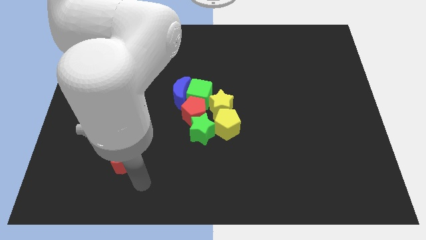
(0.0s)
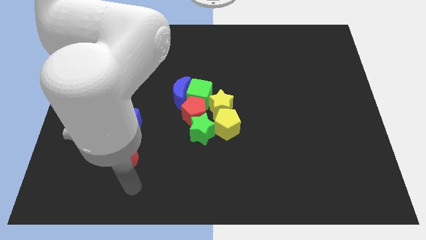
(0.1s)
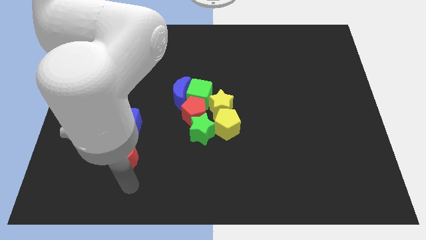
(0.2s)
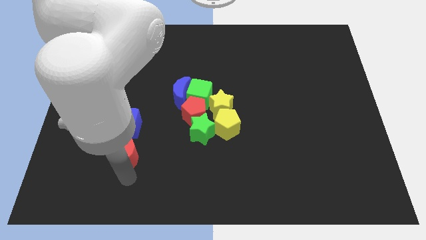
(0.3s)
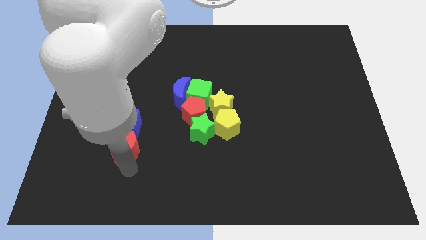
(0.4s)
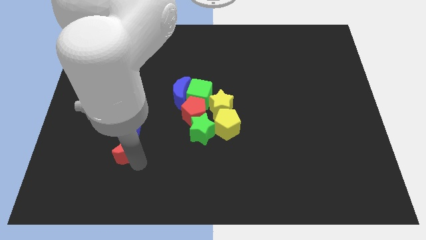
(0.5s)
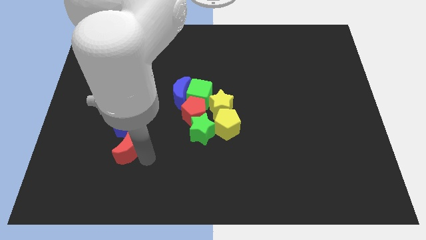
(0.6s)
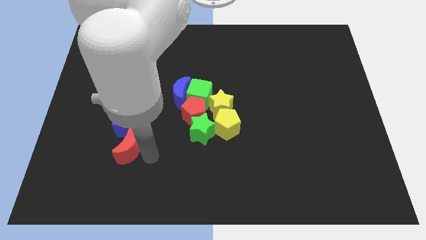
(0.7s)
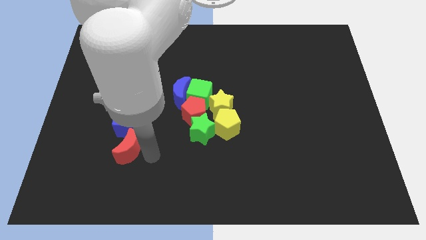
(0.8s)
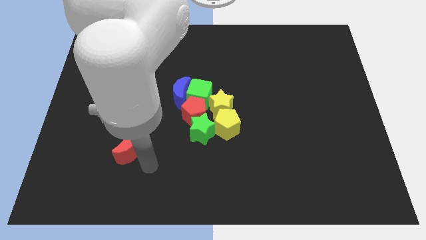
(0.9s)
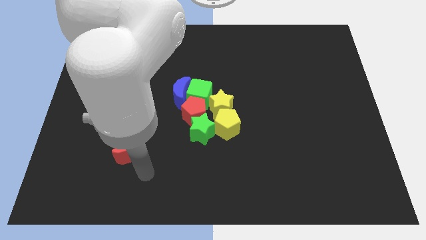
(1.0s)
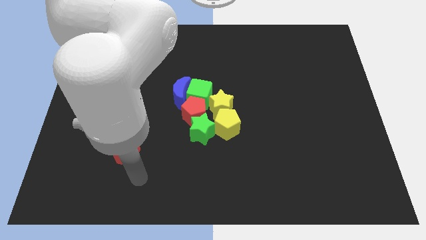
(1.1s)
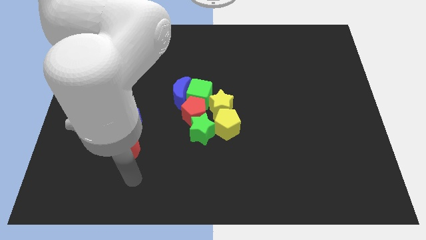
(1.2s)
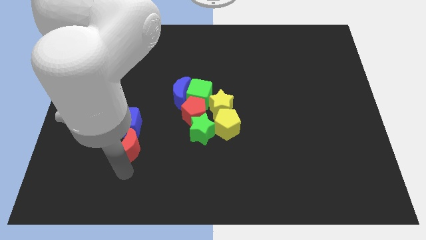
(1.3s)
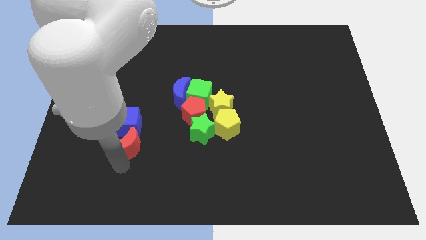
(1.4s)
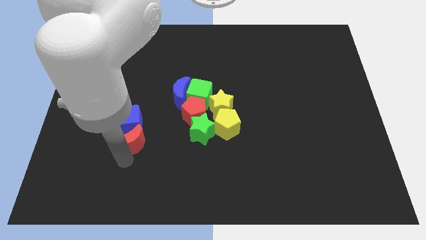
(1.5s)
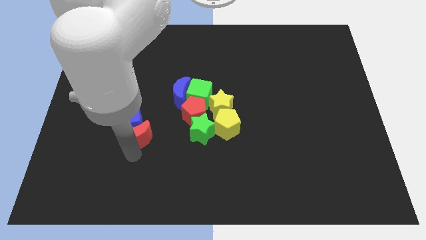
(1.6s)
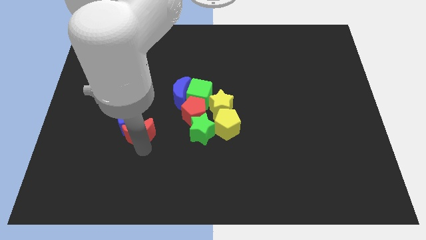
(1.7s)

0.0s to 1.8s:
push the red moon into the blue cube

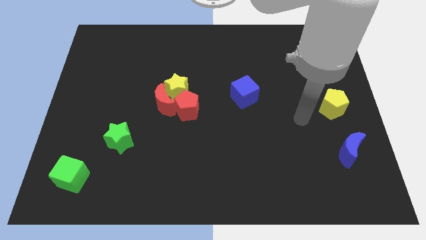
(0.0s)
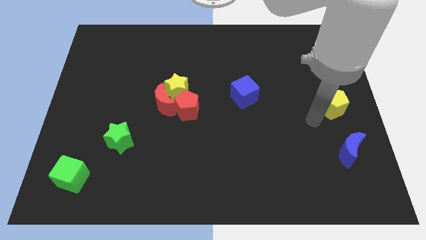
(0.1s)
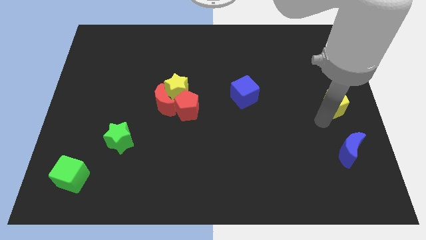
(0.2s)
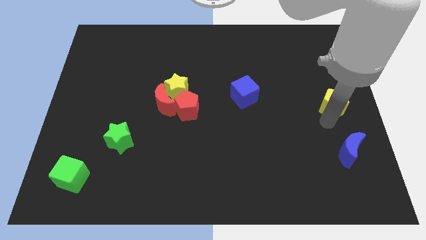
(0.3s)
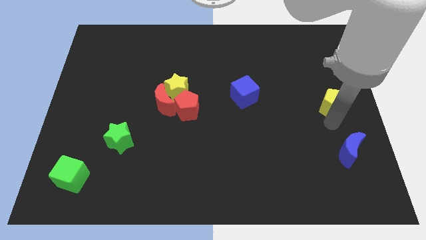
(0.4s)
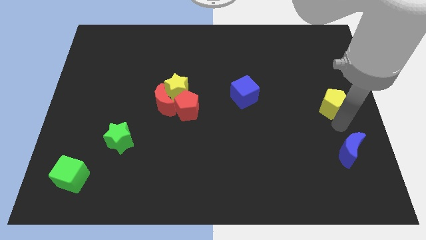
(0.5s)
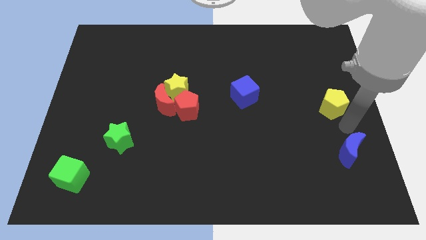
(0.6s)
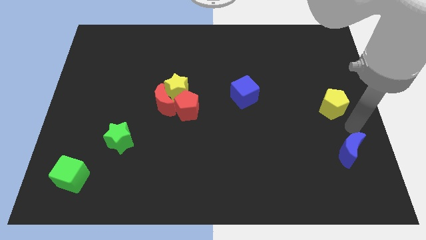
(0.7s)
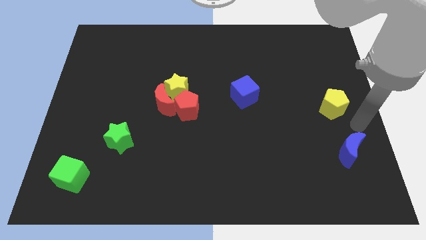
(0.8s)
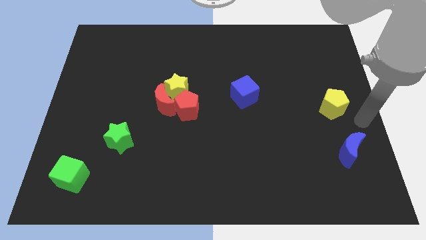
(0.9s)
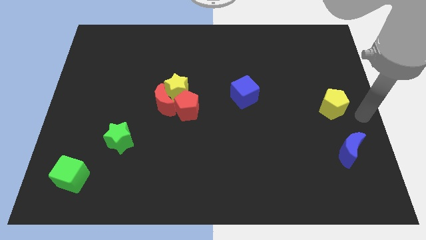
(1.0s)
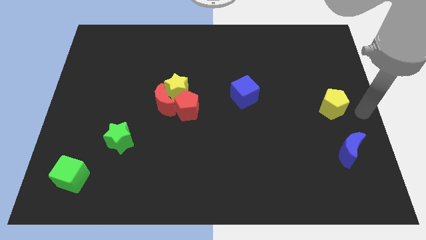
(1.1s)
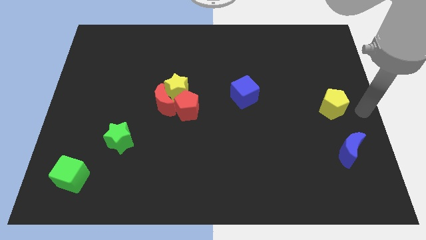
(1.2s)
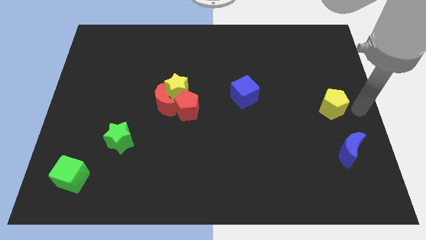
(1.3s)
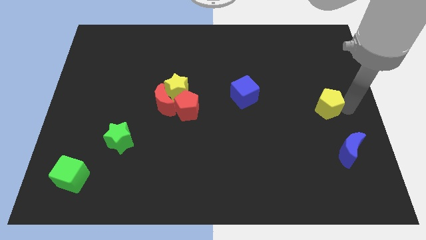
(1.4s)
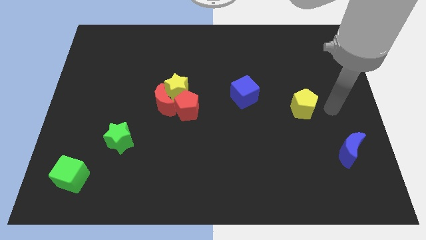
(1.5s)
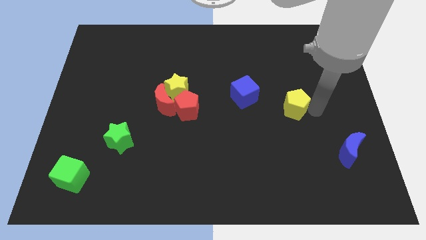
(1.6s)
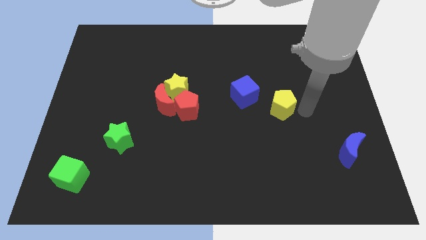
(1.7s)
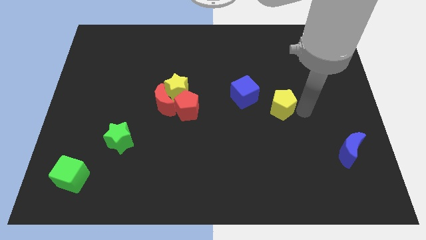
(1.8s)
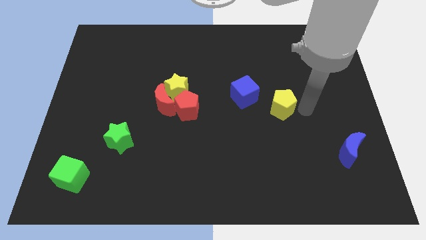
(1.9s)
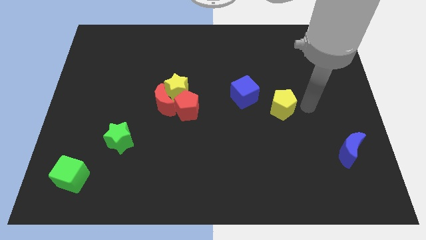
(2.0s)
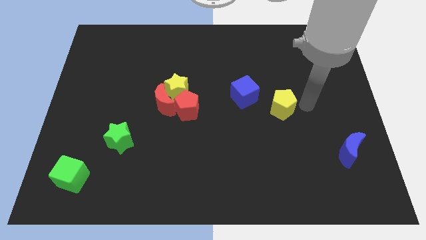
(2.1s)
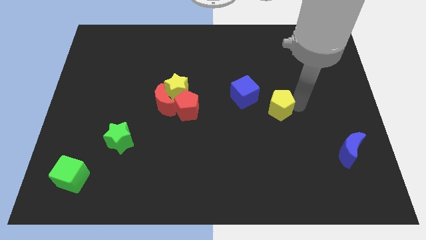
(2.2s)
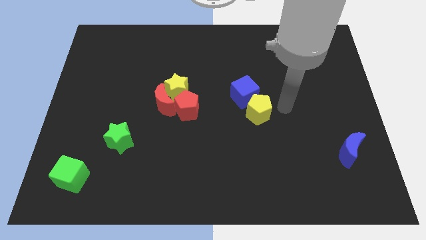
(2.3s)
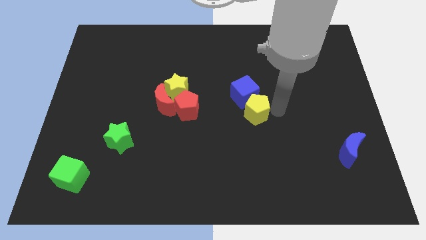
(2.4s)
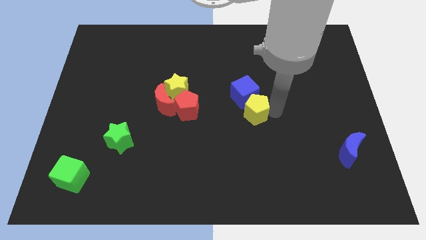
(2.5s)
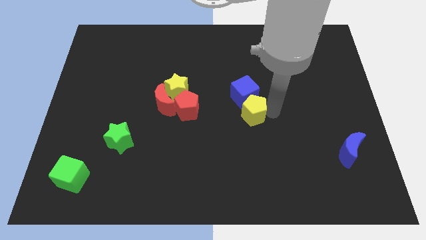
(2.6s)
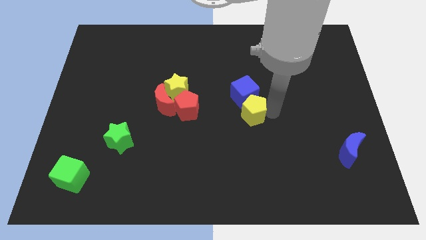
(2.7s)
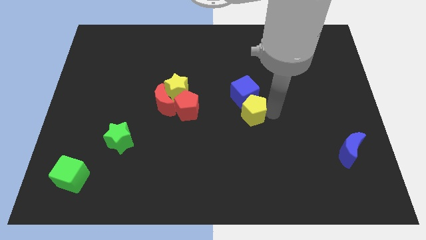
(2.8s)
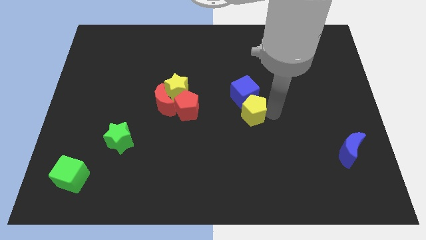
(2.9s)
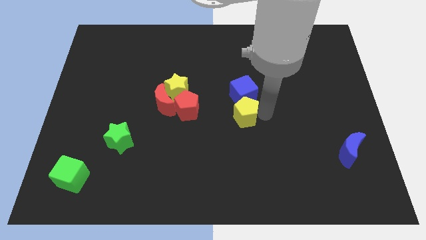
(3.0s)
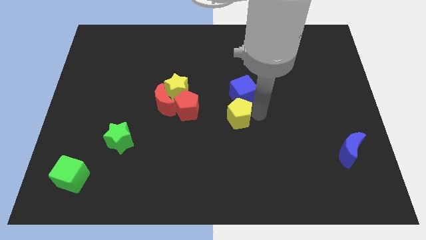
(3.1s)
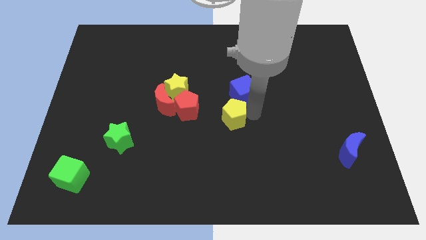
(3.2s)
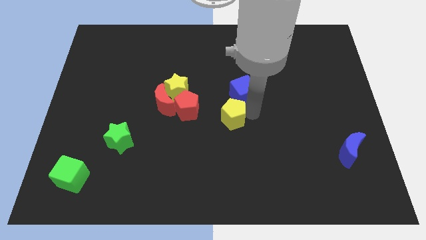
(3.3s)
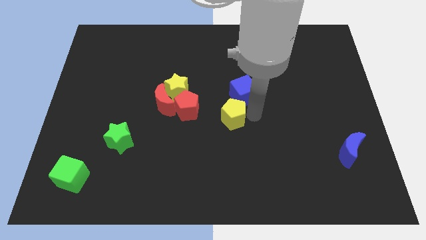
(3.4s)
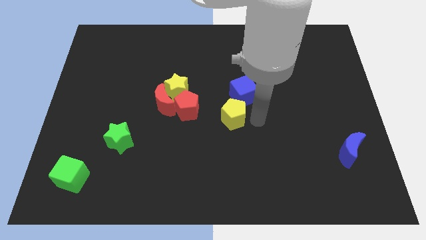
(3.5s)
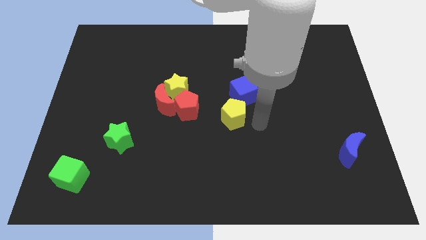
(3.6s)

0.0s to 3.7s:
move the yellow pentagon towards the center of the board

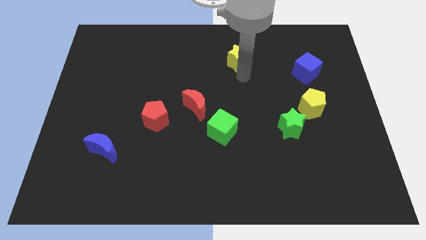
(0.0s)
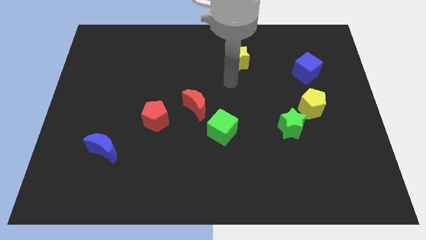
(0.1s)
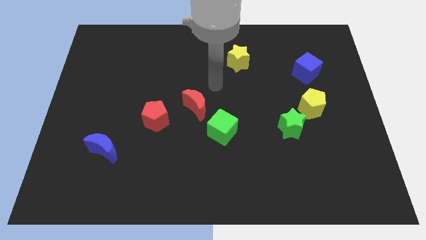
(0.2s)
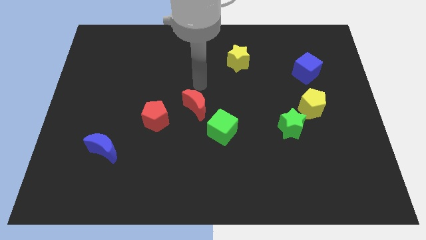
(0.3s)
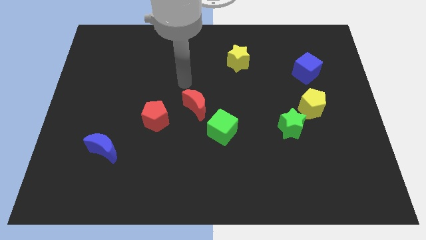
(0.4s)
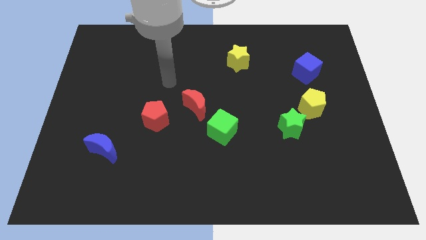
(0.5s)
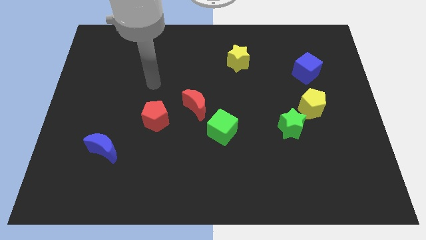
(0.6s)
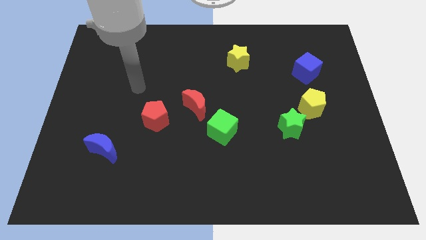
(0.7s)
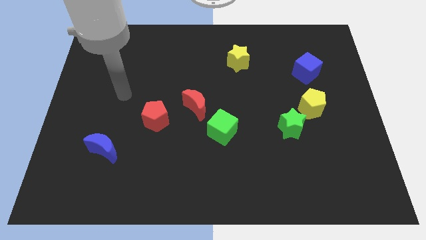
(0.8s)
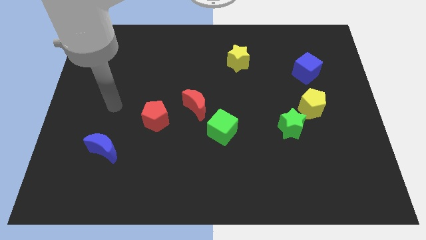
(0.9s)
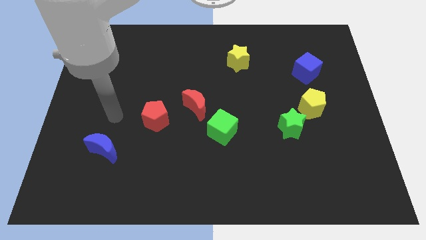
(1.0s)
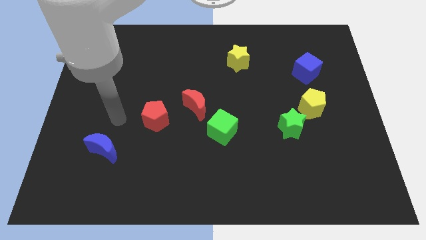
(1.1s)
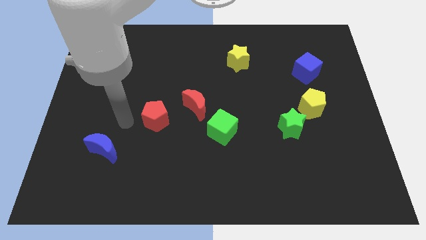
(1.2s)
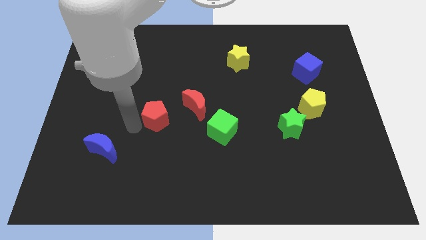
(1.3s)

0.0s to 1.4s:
point your arm to the left side of red pentagon

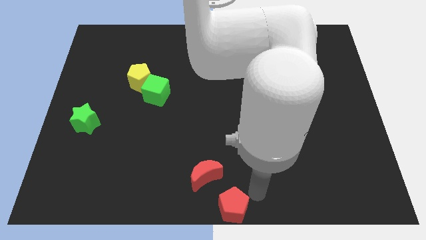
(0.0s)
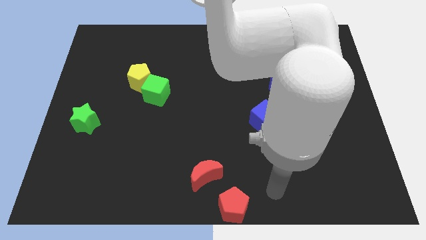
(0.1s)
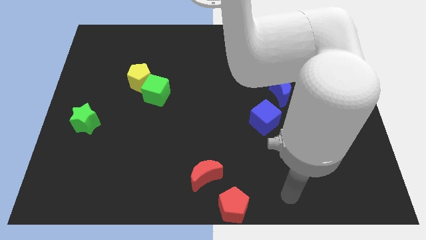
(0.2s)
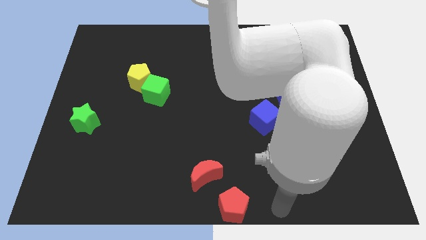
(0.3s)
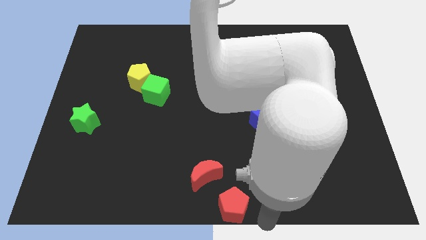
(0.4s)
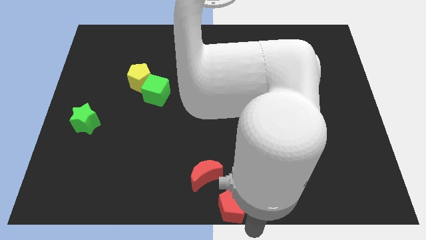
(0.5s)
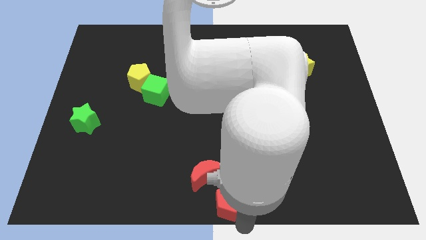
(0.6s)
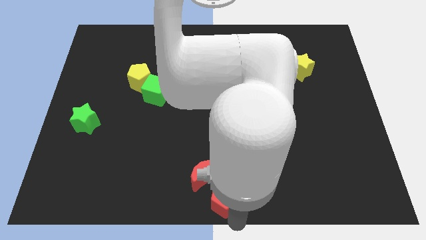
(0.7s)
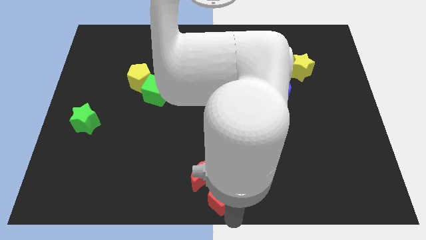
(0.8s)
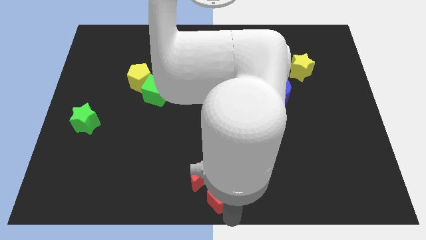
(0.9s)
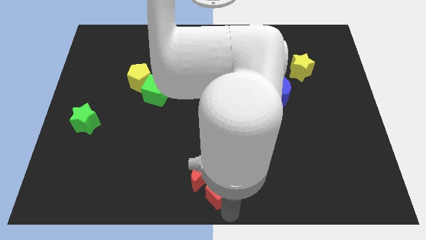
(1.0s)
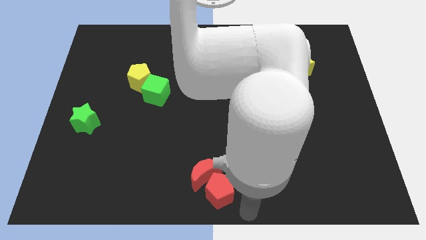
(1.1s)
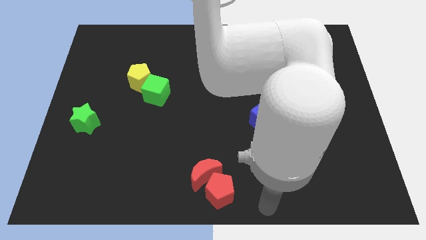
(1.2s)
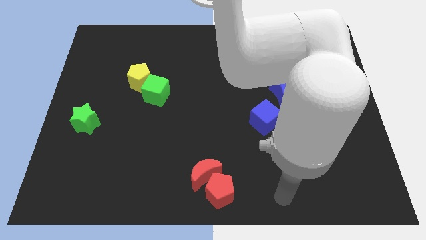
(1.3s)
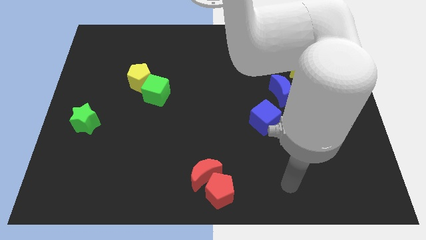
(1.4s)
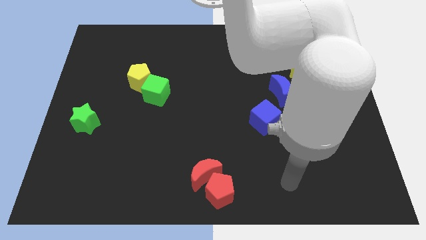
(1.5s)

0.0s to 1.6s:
move red pentagon into red moon

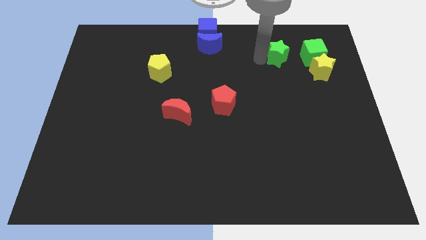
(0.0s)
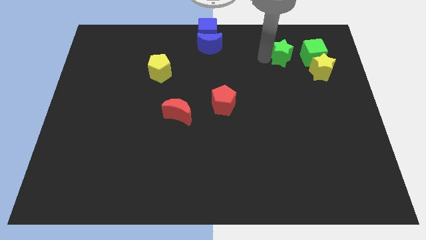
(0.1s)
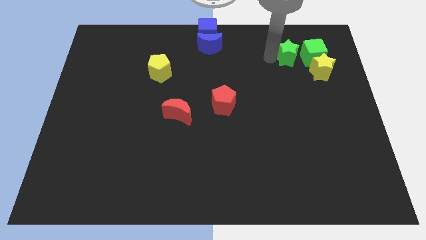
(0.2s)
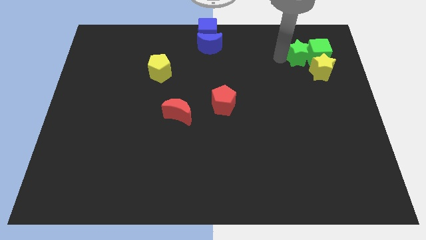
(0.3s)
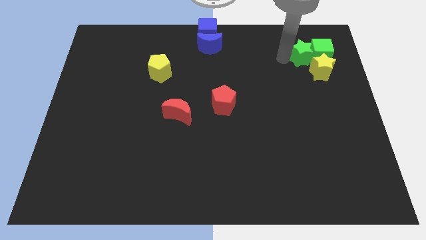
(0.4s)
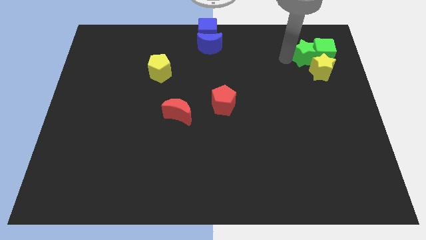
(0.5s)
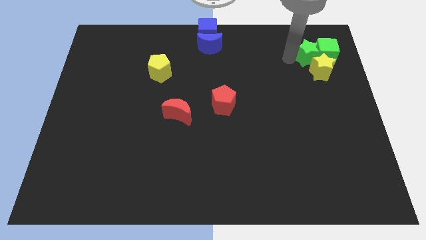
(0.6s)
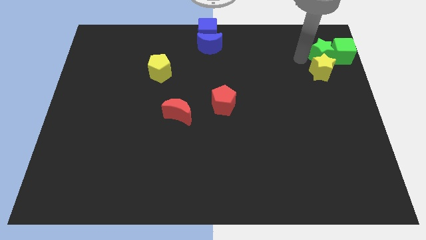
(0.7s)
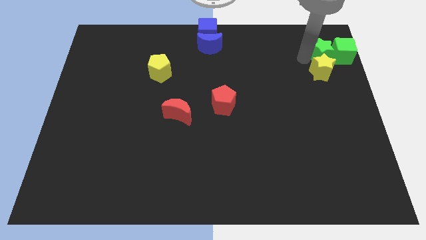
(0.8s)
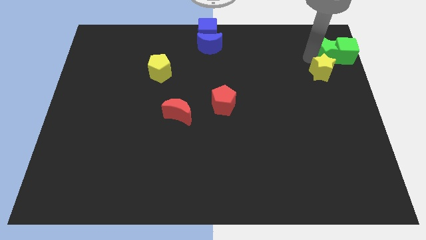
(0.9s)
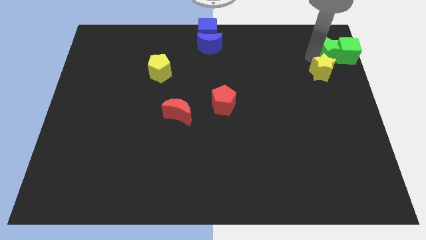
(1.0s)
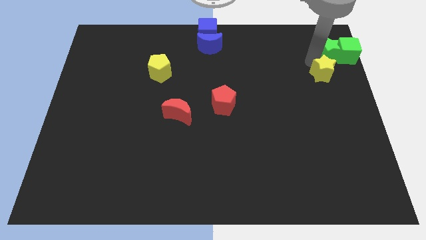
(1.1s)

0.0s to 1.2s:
drag the green star into the green cube
